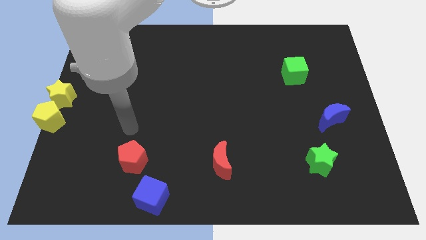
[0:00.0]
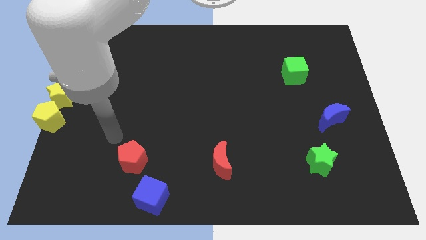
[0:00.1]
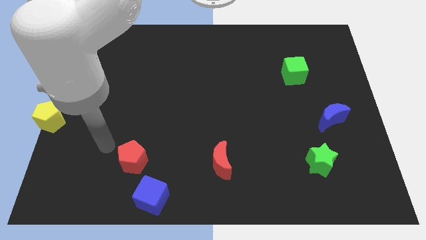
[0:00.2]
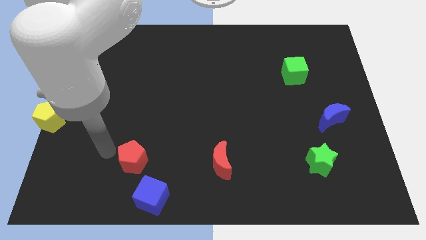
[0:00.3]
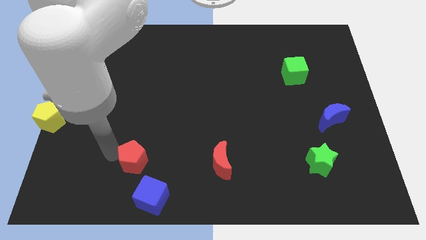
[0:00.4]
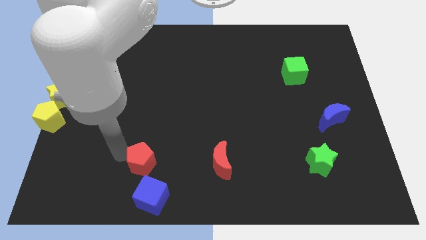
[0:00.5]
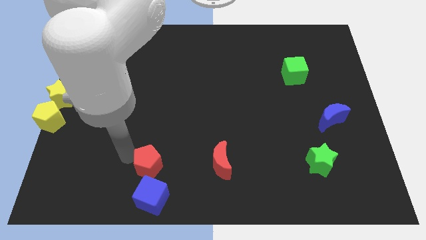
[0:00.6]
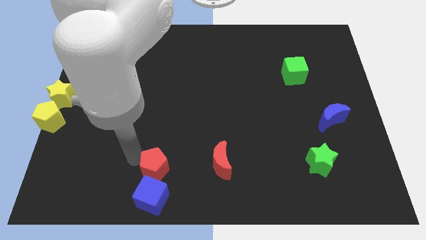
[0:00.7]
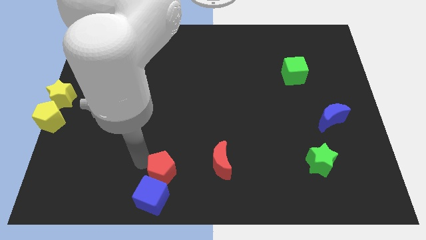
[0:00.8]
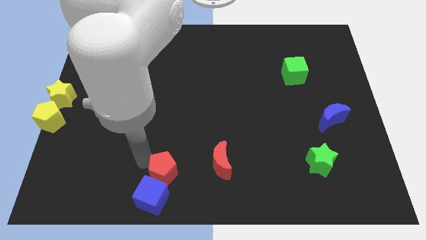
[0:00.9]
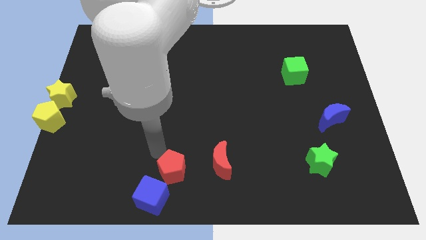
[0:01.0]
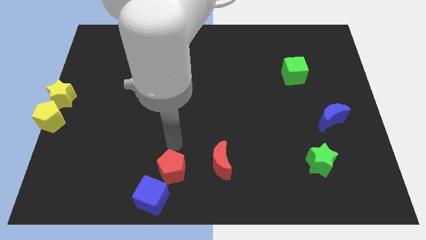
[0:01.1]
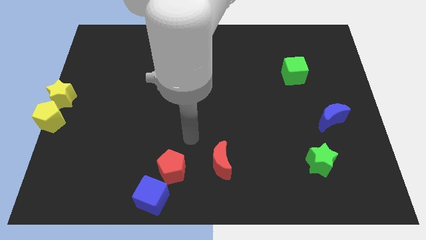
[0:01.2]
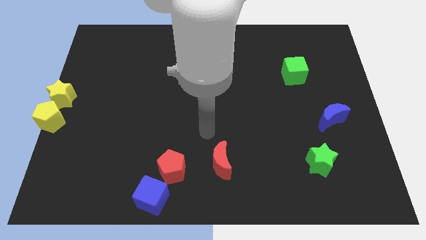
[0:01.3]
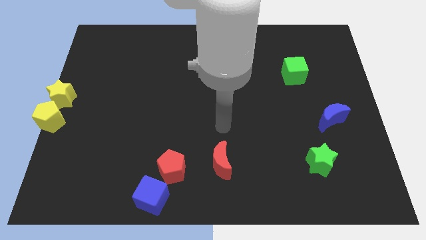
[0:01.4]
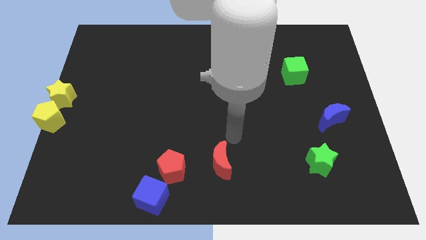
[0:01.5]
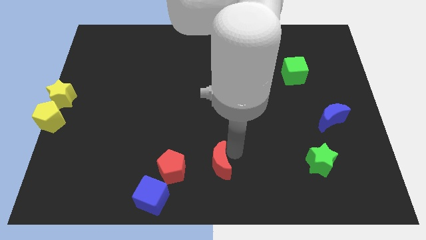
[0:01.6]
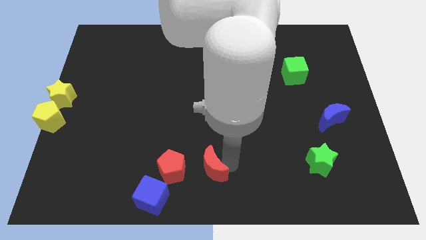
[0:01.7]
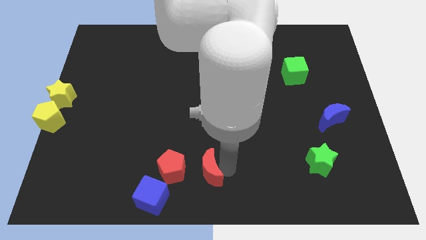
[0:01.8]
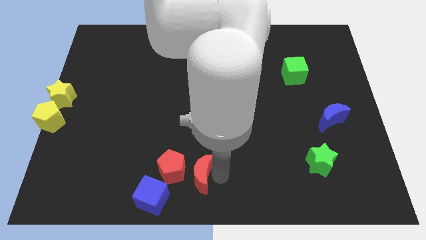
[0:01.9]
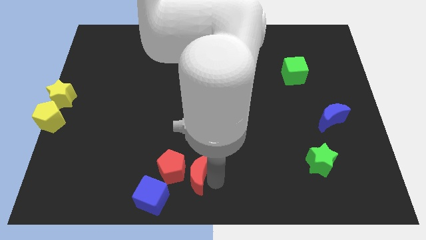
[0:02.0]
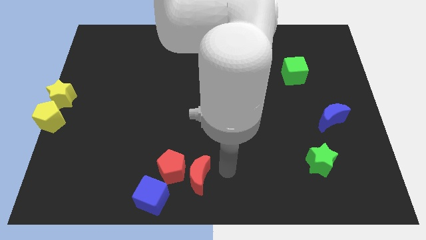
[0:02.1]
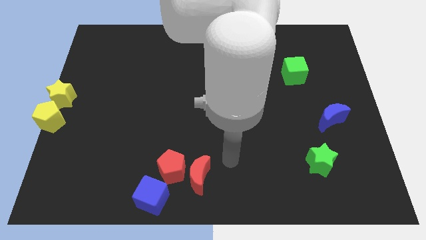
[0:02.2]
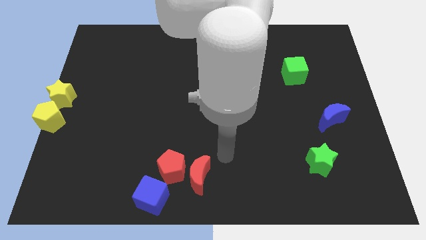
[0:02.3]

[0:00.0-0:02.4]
move the red moon to the right side of the red pentagon

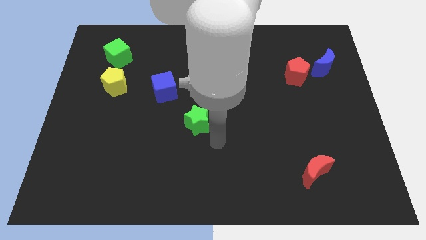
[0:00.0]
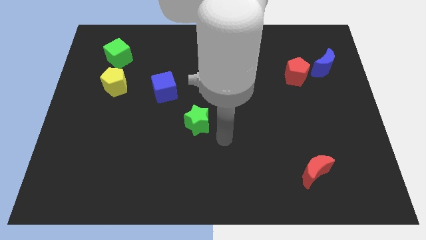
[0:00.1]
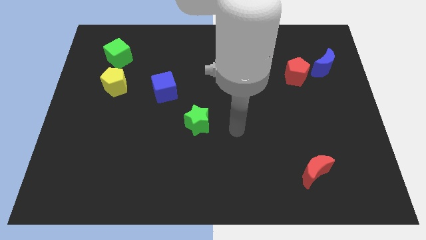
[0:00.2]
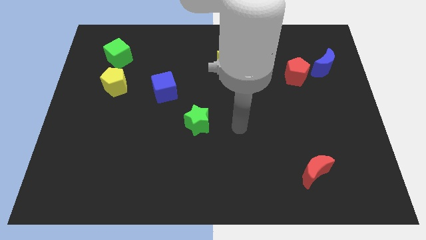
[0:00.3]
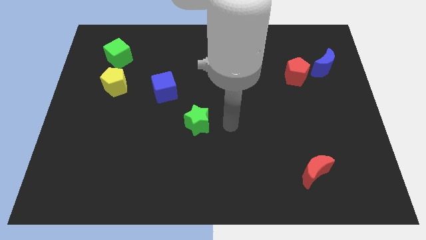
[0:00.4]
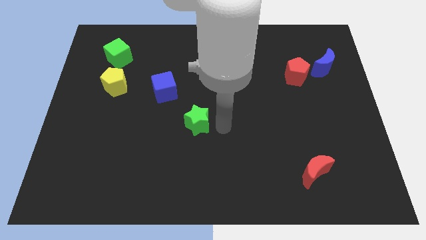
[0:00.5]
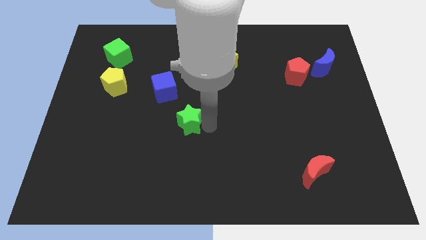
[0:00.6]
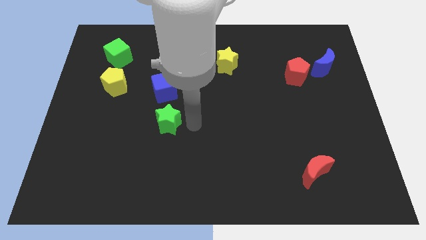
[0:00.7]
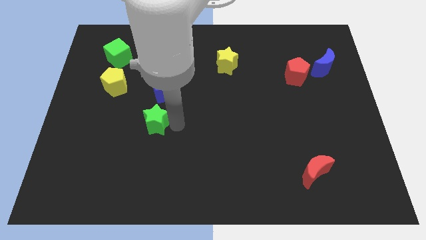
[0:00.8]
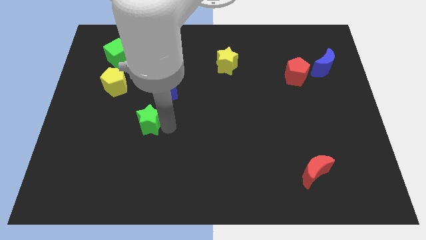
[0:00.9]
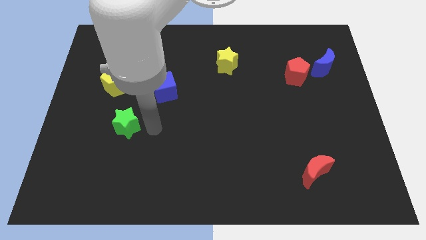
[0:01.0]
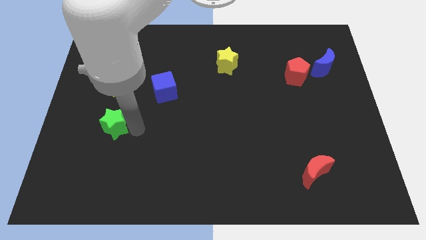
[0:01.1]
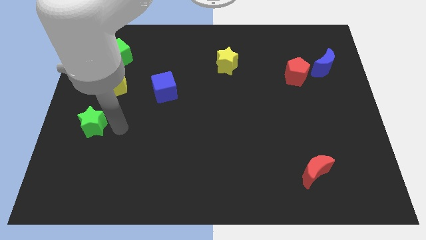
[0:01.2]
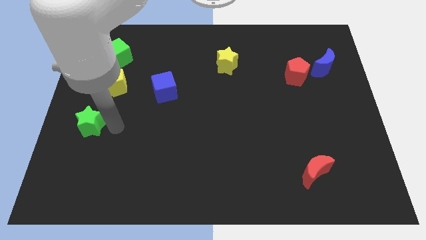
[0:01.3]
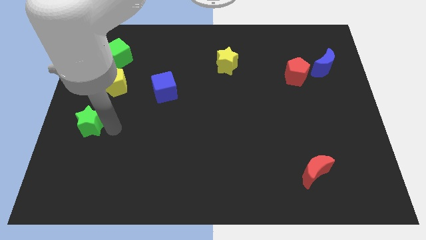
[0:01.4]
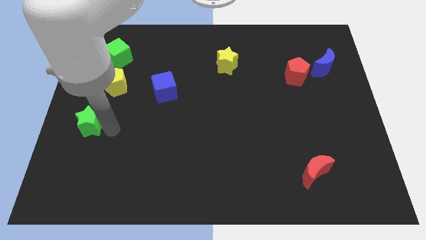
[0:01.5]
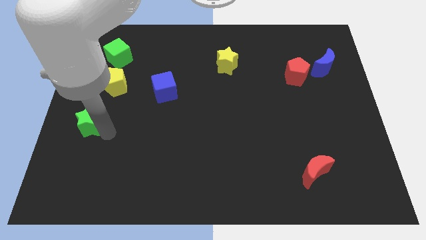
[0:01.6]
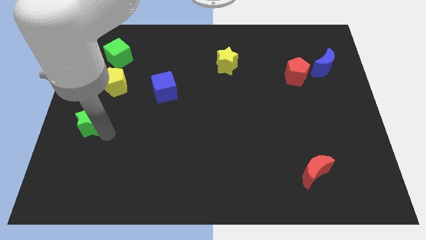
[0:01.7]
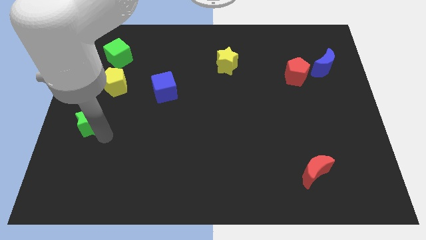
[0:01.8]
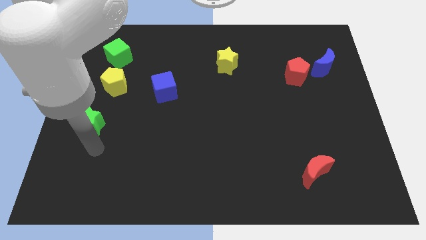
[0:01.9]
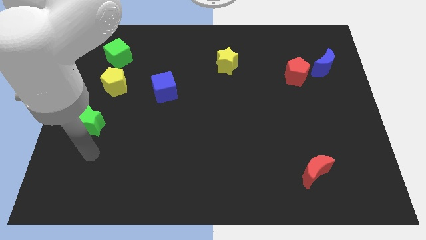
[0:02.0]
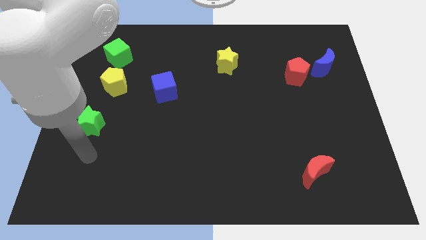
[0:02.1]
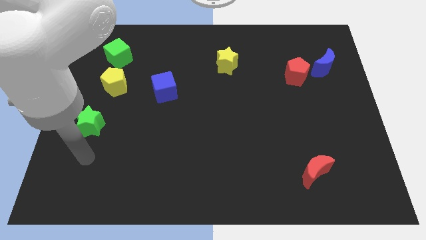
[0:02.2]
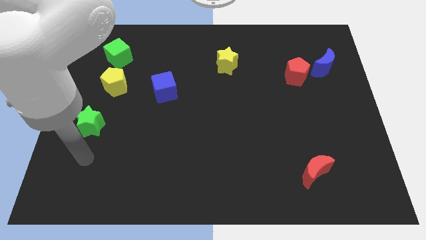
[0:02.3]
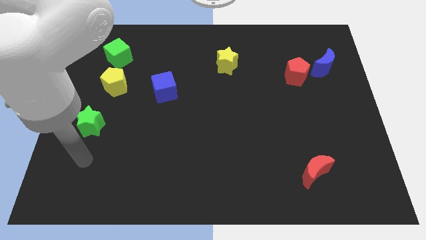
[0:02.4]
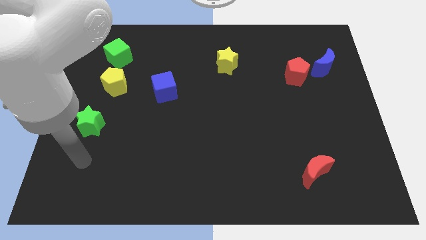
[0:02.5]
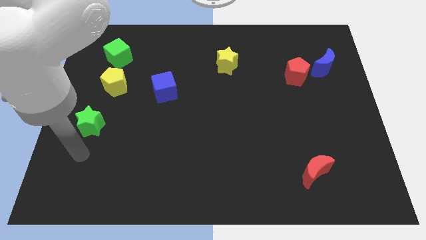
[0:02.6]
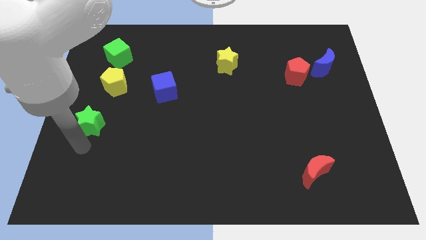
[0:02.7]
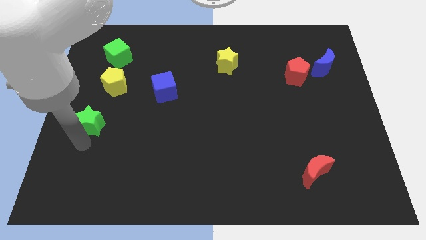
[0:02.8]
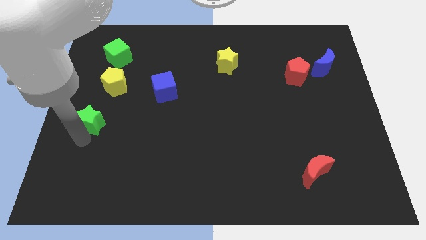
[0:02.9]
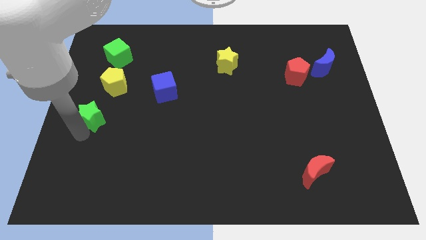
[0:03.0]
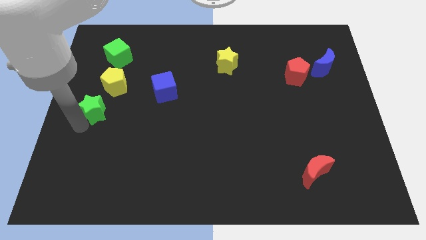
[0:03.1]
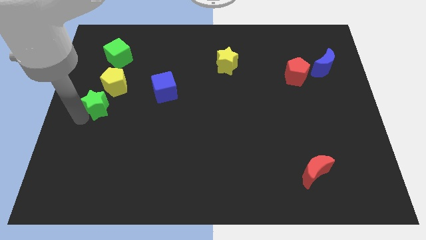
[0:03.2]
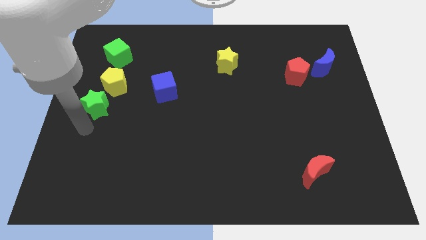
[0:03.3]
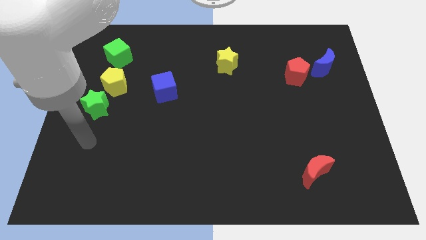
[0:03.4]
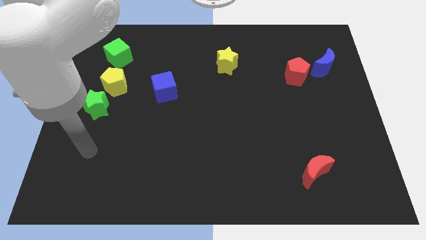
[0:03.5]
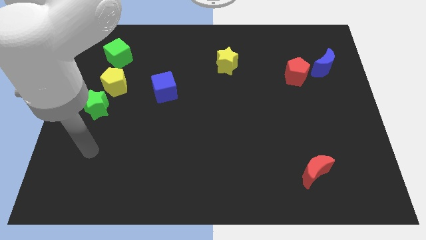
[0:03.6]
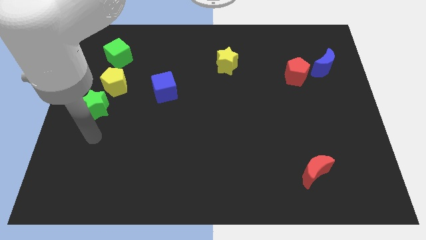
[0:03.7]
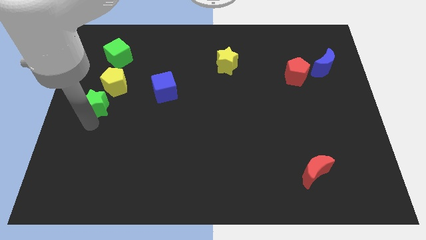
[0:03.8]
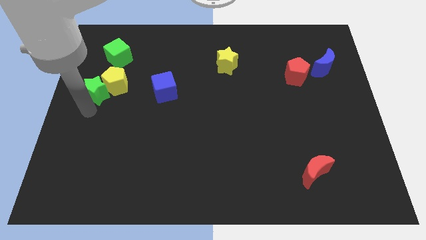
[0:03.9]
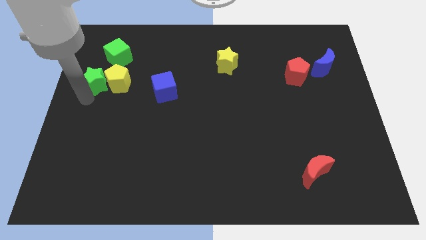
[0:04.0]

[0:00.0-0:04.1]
push green star into yellow pentagon

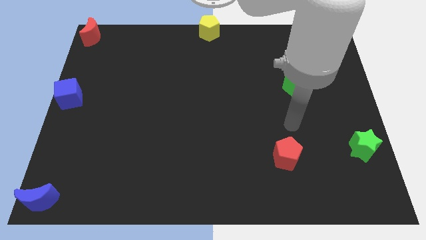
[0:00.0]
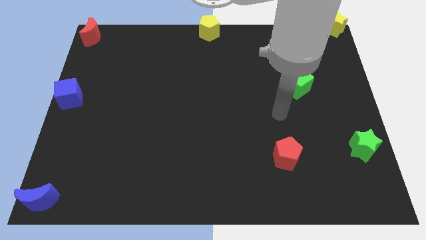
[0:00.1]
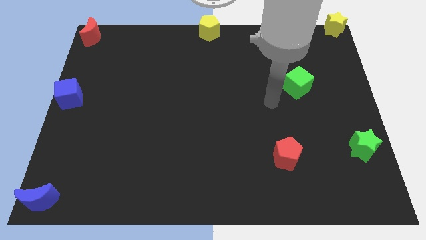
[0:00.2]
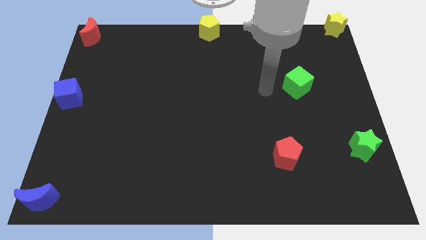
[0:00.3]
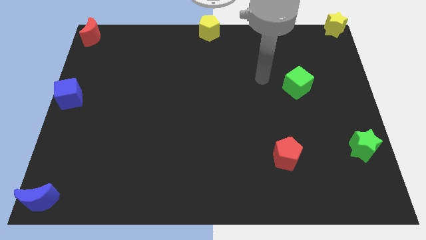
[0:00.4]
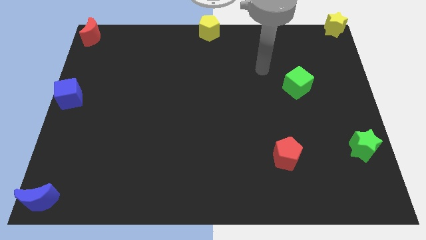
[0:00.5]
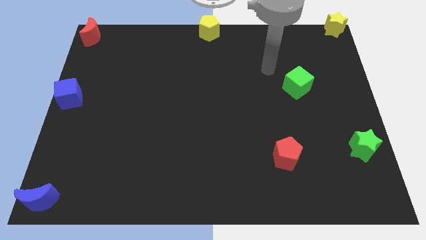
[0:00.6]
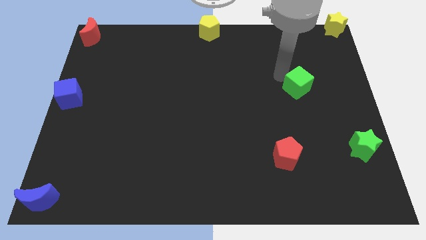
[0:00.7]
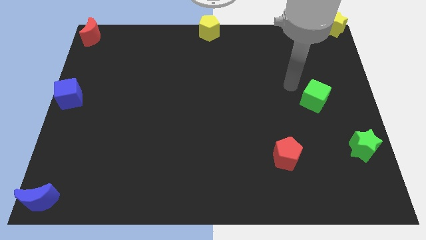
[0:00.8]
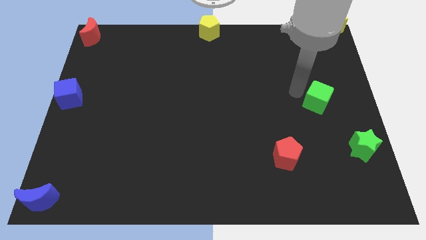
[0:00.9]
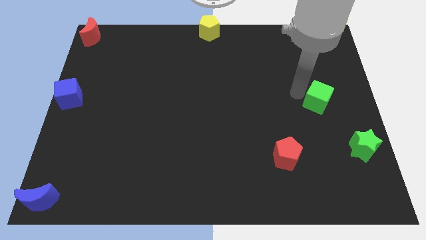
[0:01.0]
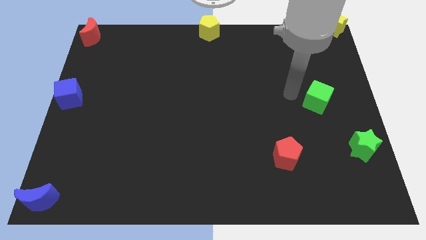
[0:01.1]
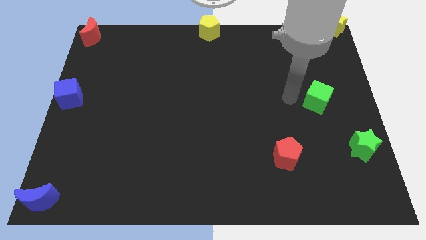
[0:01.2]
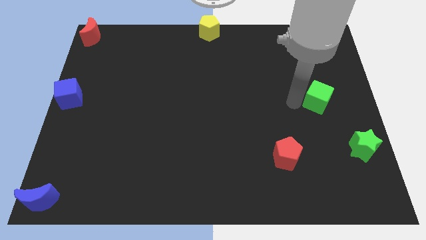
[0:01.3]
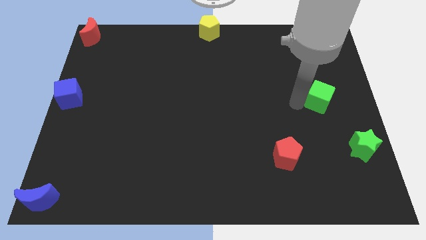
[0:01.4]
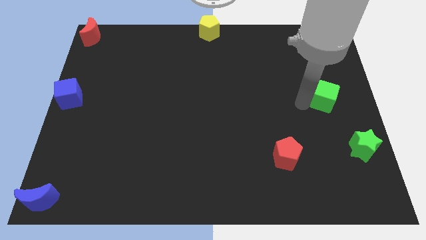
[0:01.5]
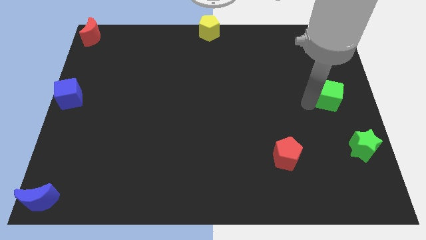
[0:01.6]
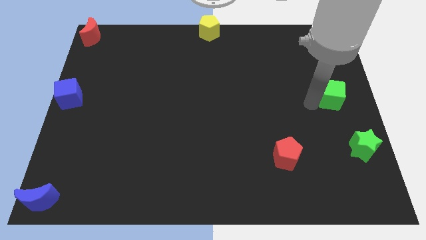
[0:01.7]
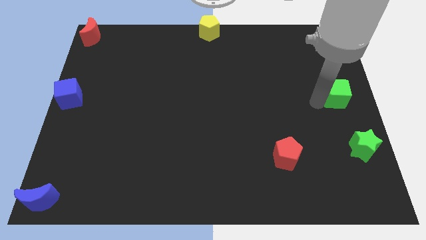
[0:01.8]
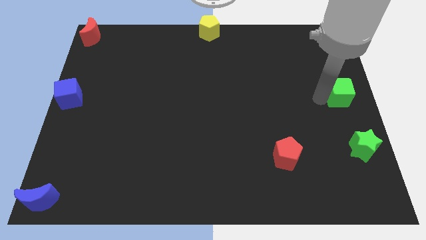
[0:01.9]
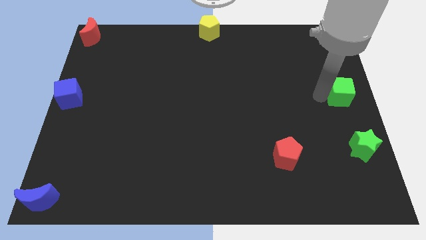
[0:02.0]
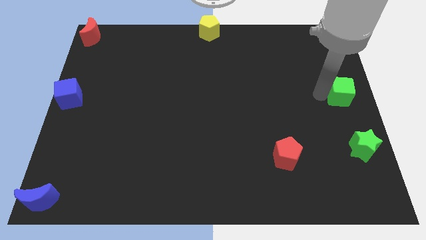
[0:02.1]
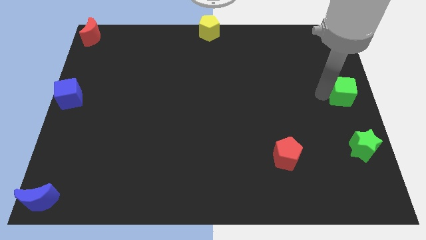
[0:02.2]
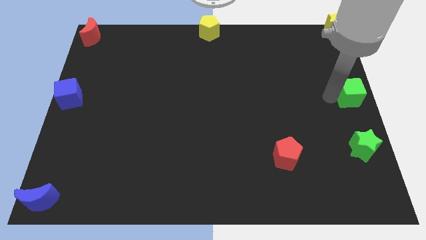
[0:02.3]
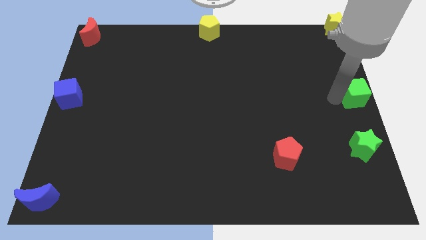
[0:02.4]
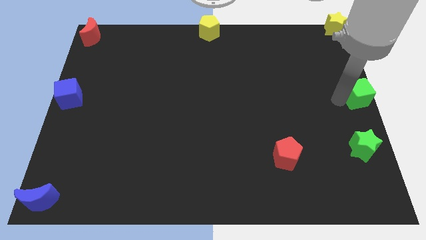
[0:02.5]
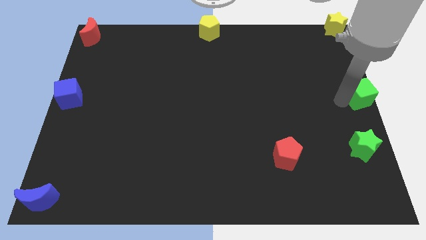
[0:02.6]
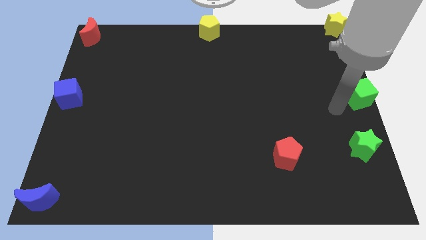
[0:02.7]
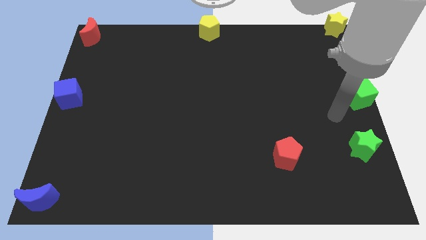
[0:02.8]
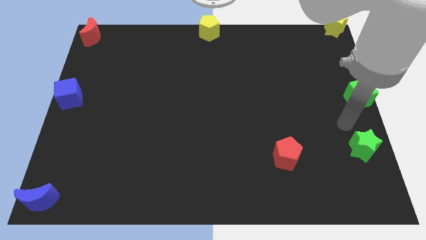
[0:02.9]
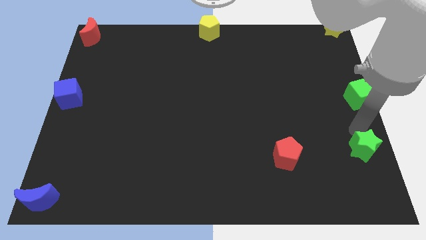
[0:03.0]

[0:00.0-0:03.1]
place the green cube at the center right corner of the board
